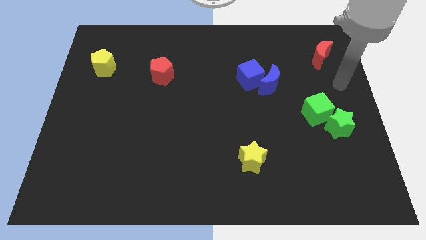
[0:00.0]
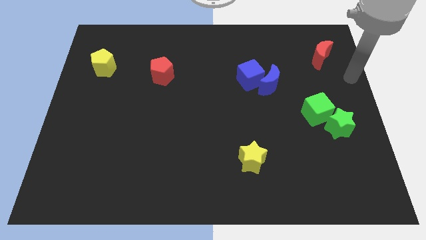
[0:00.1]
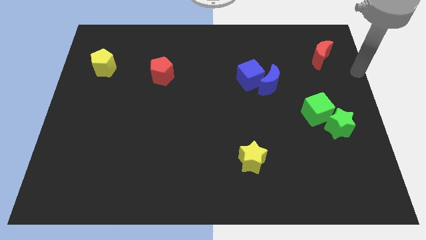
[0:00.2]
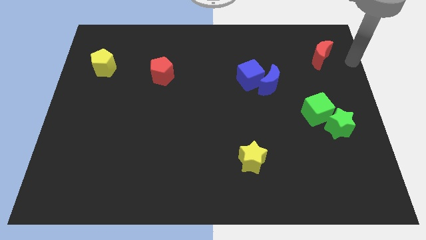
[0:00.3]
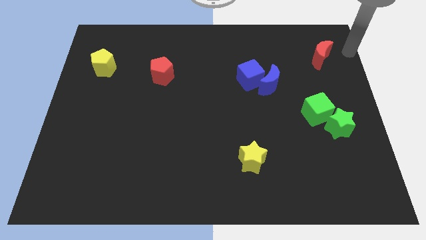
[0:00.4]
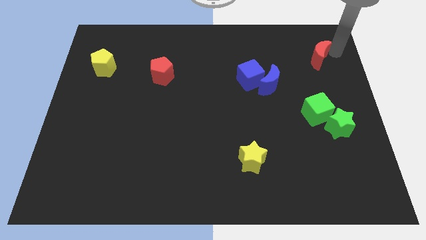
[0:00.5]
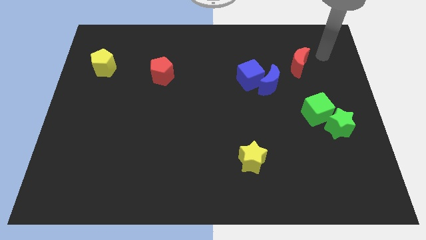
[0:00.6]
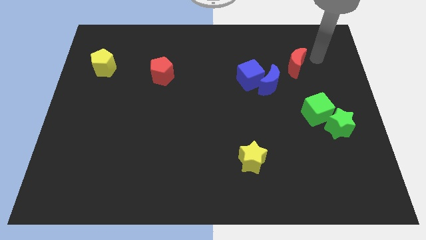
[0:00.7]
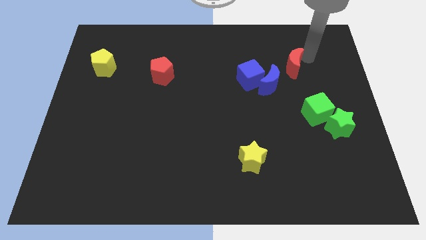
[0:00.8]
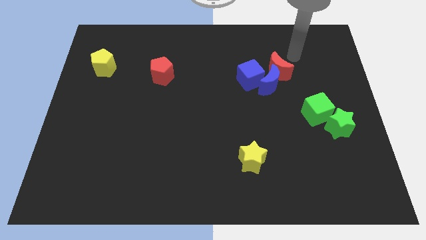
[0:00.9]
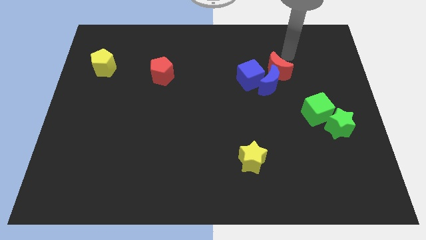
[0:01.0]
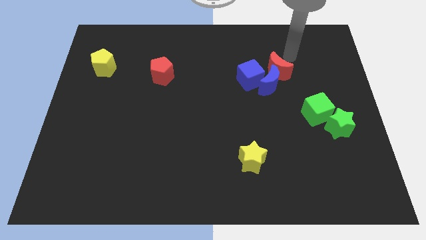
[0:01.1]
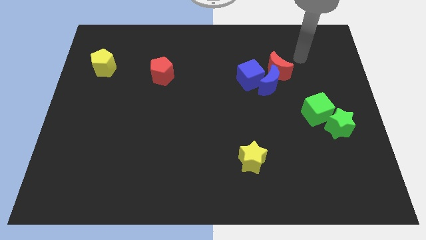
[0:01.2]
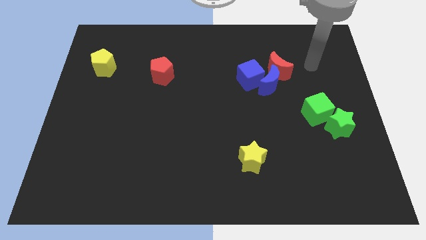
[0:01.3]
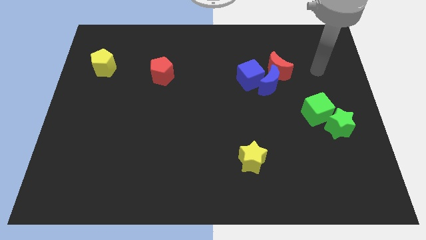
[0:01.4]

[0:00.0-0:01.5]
push the red crescent close to the blue cerscent

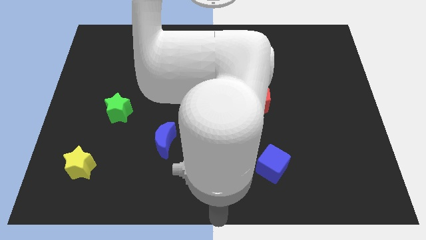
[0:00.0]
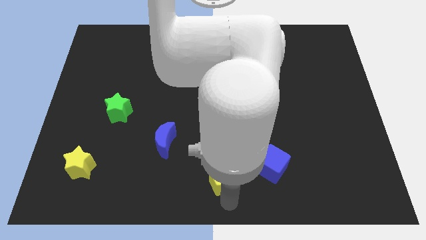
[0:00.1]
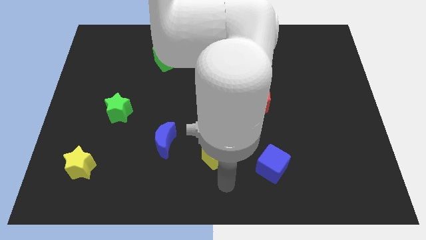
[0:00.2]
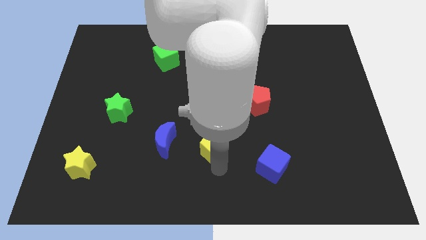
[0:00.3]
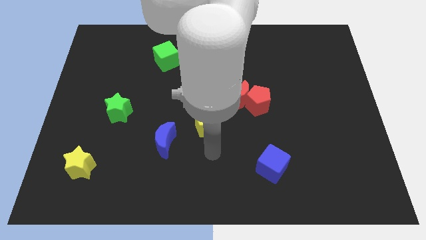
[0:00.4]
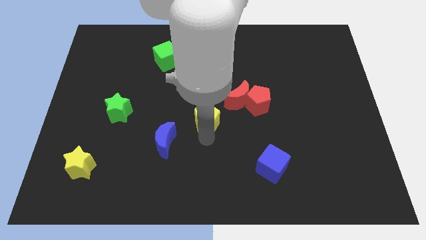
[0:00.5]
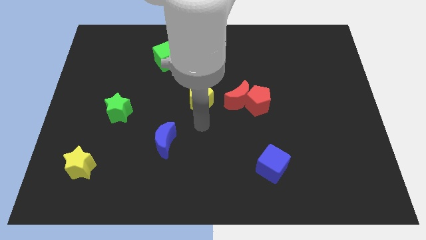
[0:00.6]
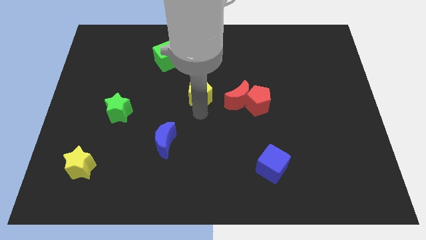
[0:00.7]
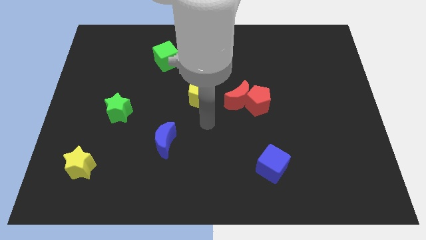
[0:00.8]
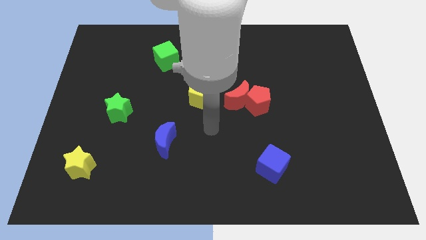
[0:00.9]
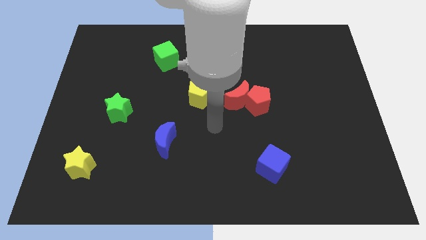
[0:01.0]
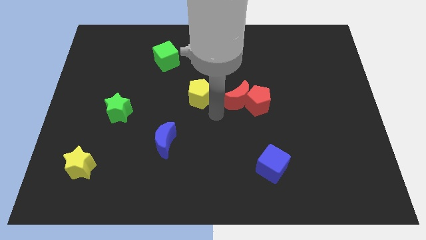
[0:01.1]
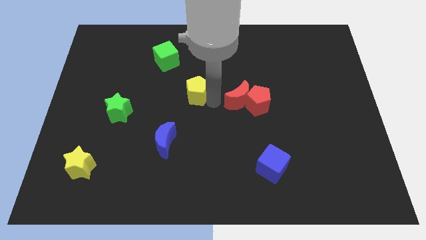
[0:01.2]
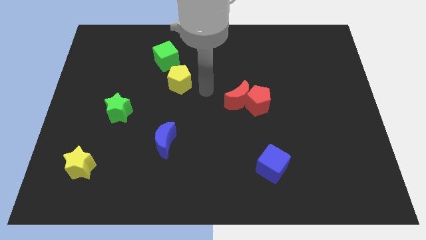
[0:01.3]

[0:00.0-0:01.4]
place the yellow pentagon left to the red moon

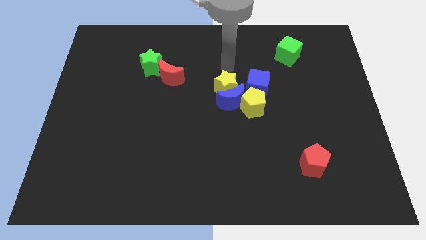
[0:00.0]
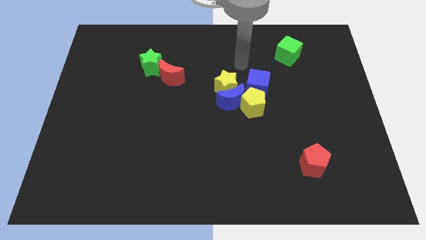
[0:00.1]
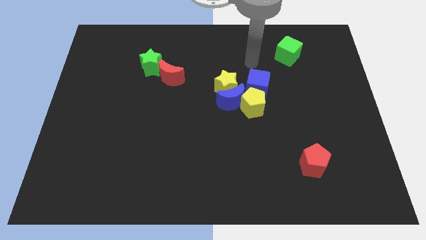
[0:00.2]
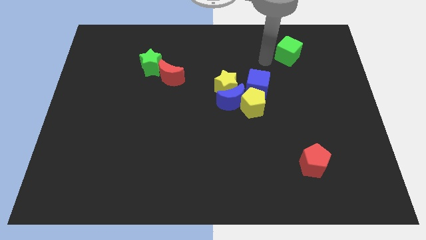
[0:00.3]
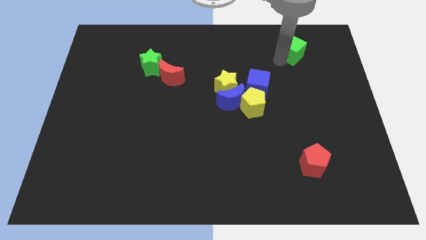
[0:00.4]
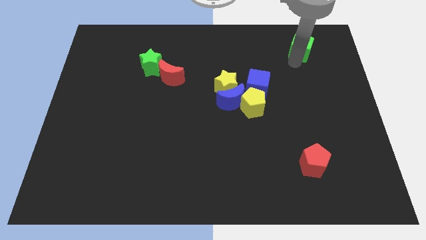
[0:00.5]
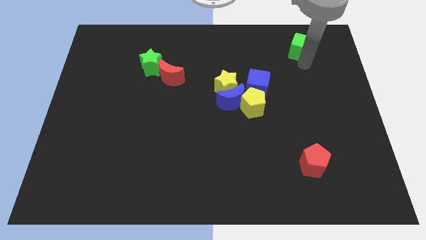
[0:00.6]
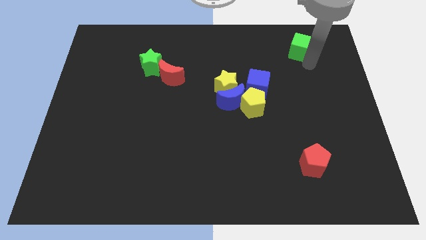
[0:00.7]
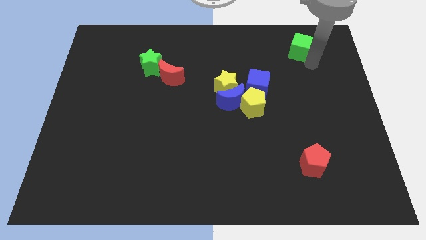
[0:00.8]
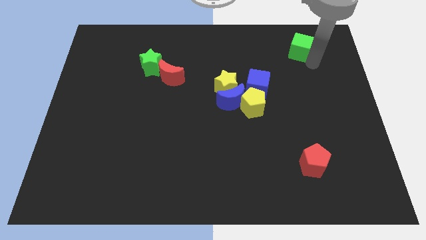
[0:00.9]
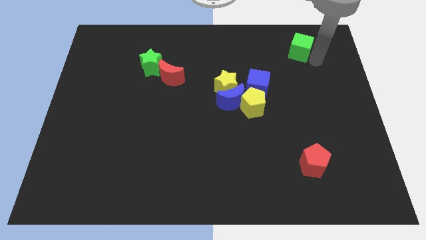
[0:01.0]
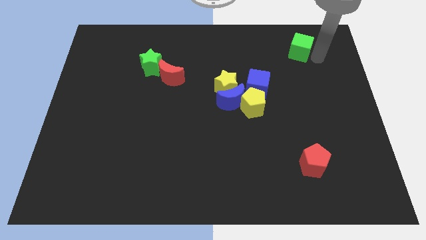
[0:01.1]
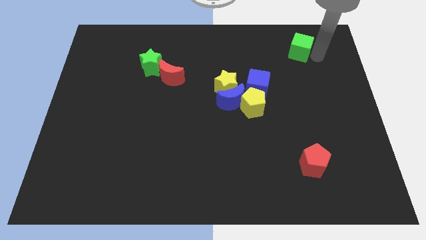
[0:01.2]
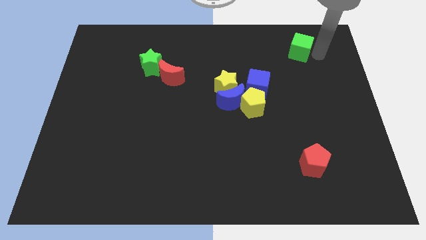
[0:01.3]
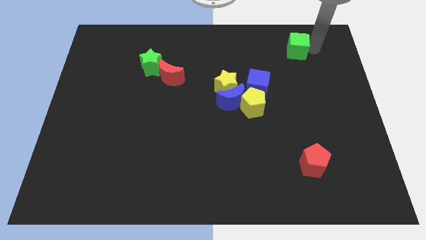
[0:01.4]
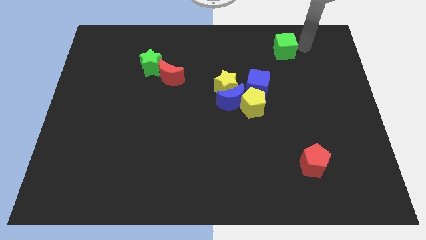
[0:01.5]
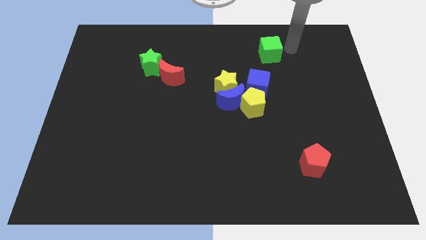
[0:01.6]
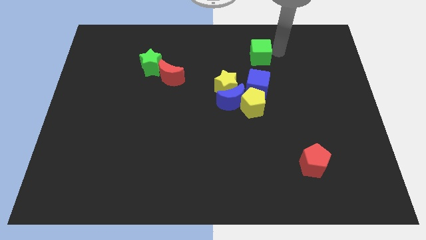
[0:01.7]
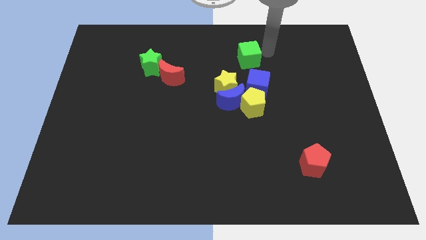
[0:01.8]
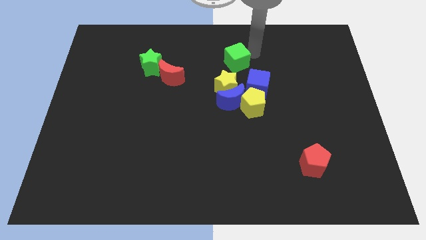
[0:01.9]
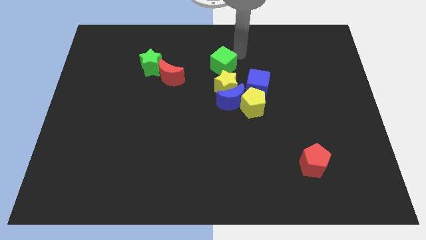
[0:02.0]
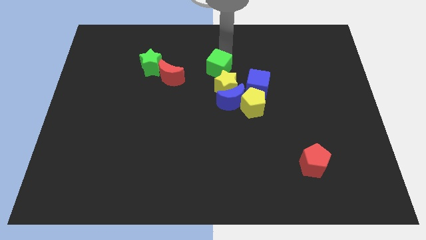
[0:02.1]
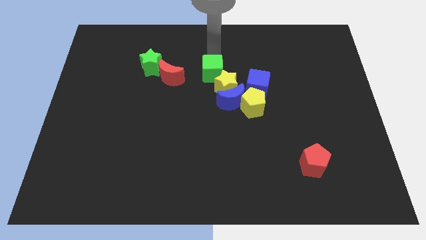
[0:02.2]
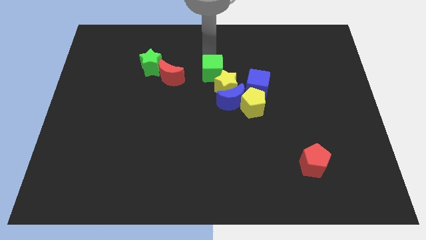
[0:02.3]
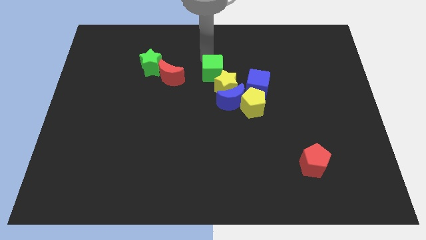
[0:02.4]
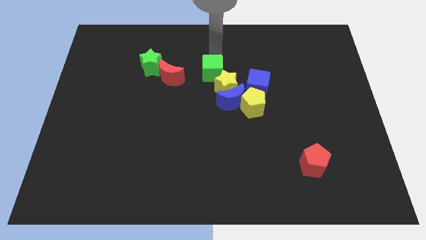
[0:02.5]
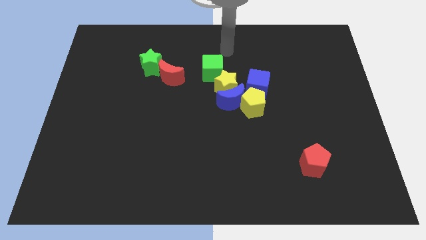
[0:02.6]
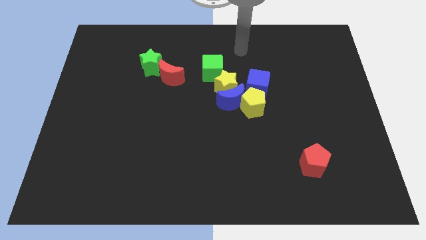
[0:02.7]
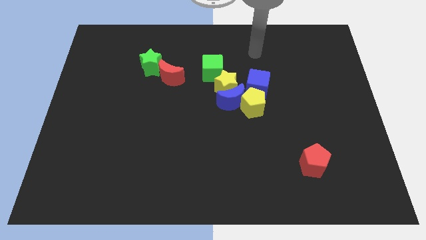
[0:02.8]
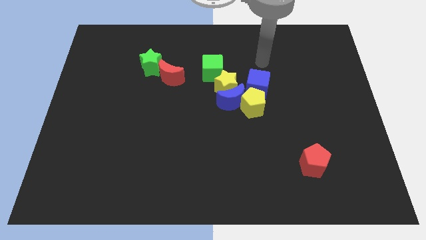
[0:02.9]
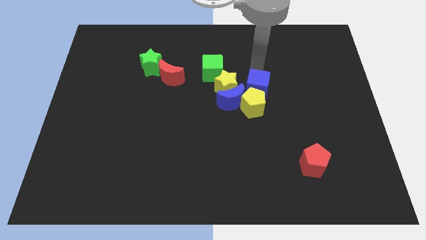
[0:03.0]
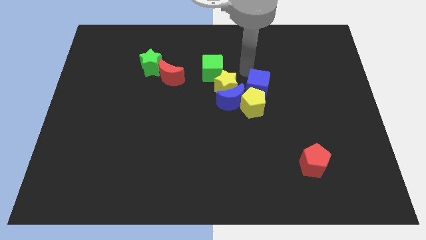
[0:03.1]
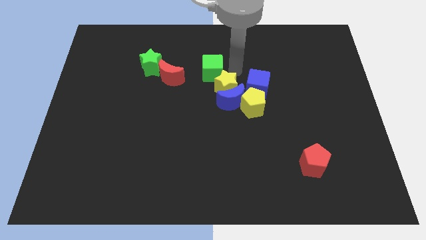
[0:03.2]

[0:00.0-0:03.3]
place the green cube above left to the yellow star

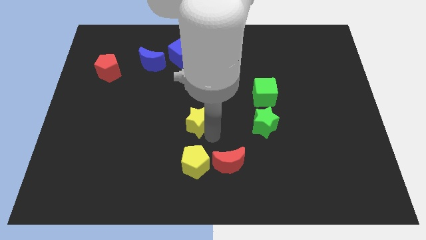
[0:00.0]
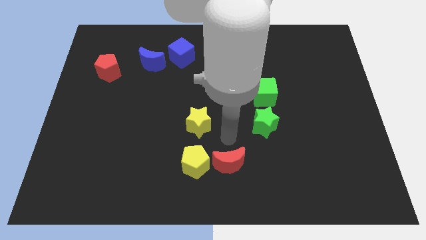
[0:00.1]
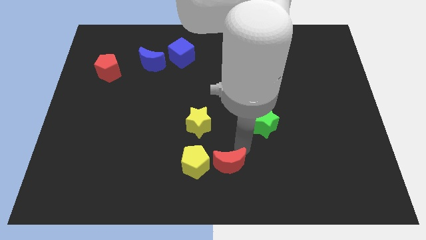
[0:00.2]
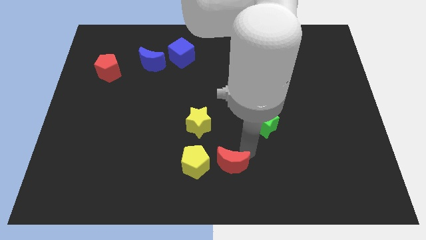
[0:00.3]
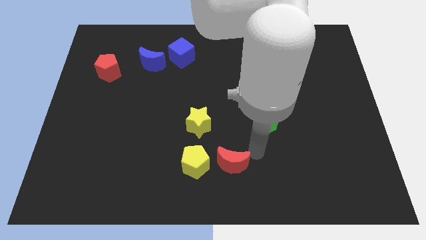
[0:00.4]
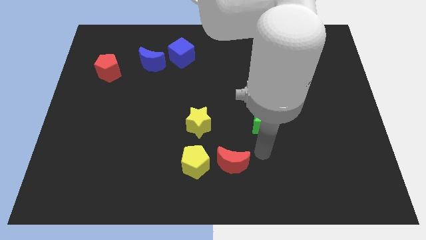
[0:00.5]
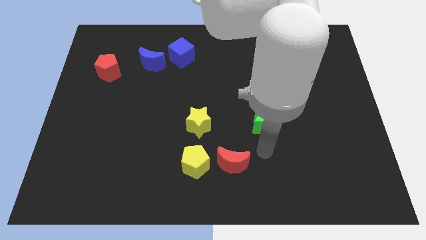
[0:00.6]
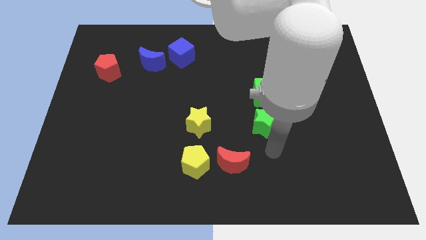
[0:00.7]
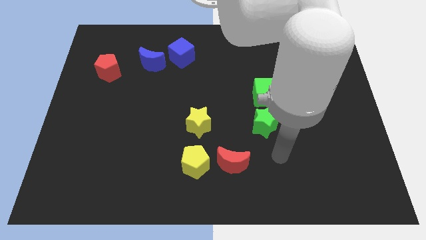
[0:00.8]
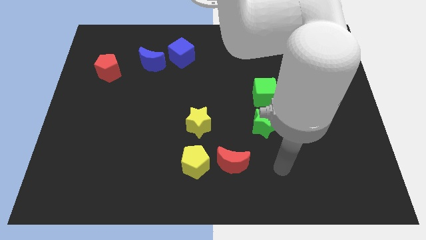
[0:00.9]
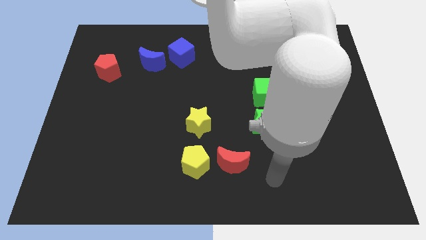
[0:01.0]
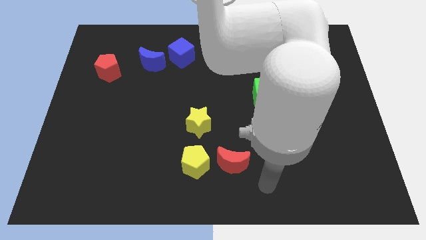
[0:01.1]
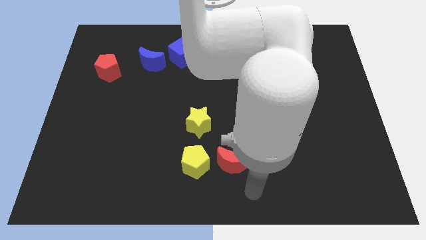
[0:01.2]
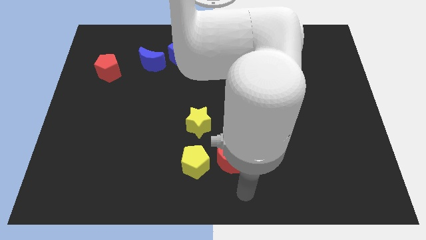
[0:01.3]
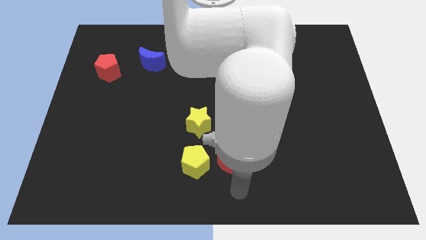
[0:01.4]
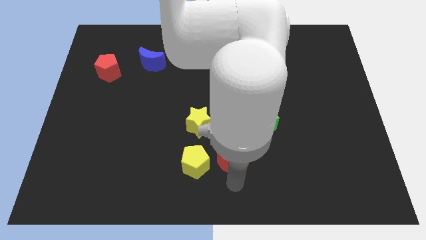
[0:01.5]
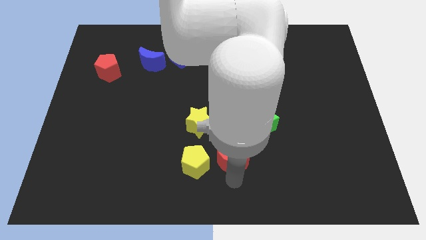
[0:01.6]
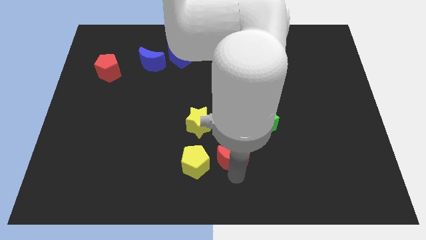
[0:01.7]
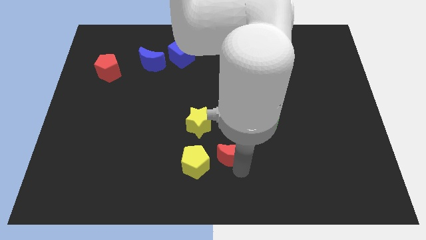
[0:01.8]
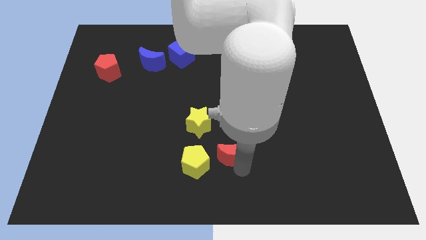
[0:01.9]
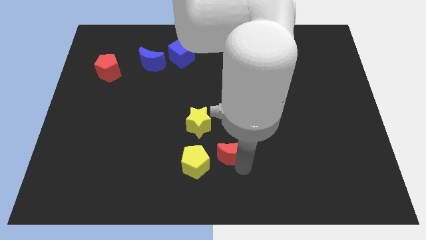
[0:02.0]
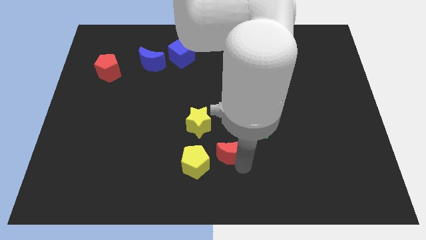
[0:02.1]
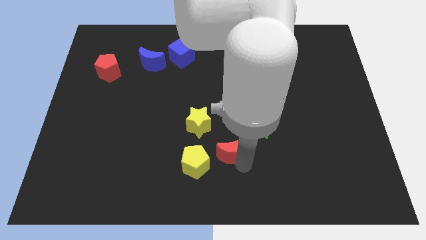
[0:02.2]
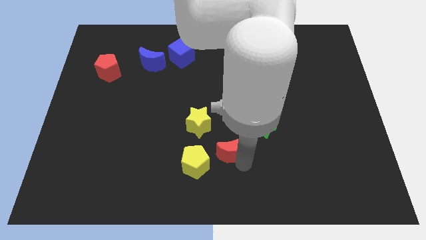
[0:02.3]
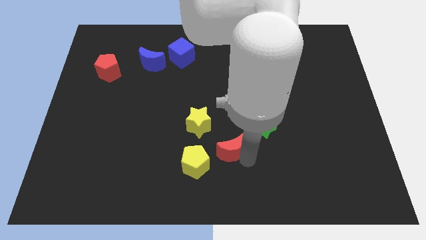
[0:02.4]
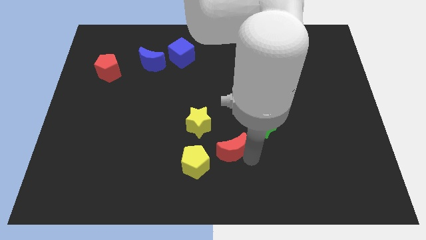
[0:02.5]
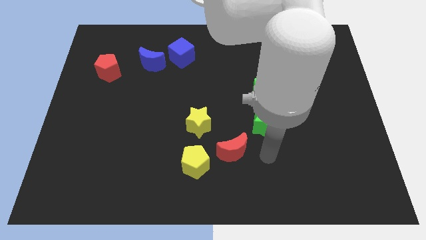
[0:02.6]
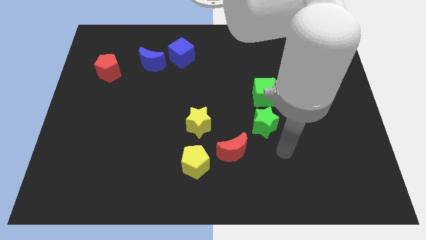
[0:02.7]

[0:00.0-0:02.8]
slightly move the red moon up
